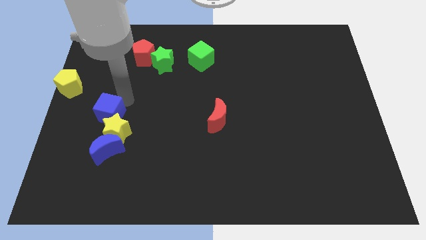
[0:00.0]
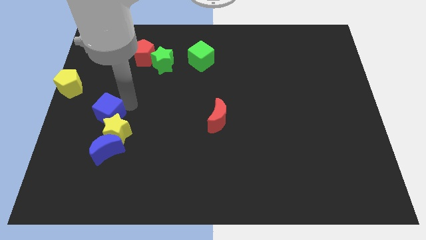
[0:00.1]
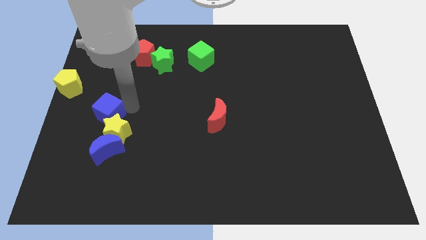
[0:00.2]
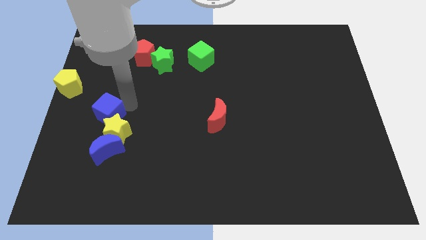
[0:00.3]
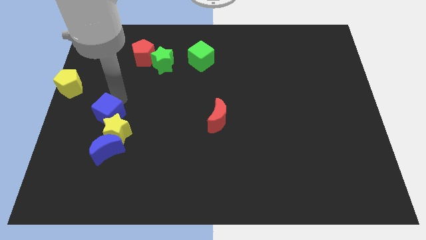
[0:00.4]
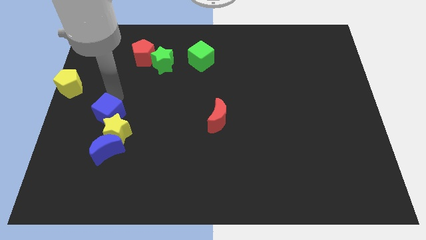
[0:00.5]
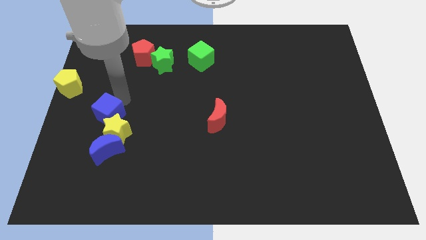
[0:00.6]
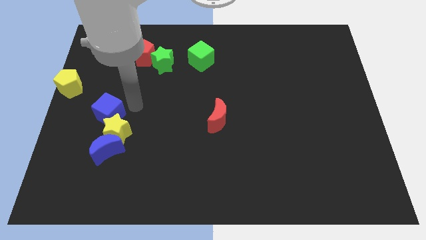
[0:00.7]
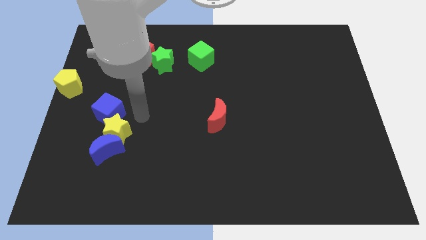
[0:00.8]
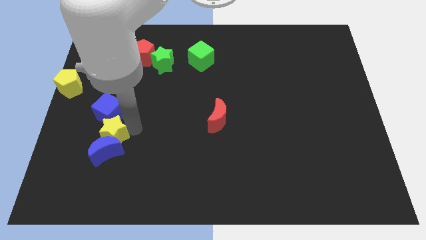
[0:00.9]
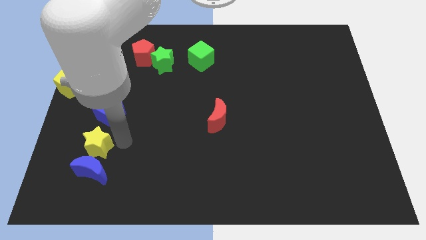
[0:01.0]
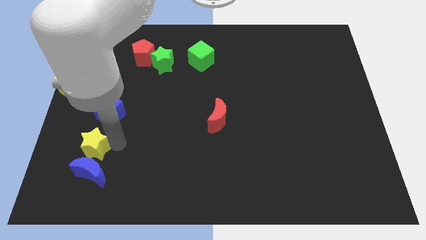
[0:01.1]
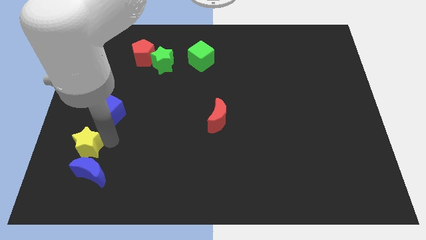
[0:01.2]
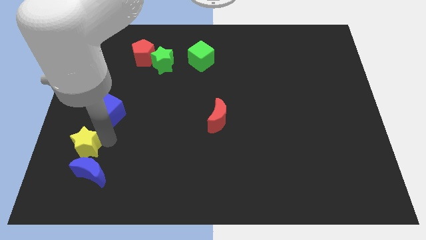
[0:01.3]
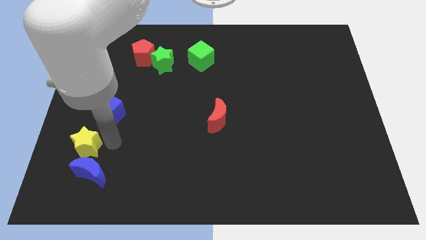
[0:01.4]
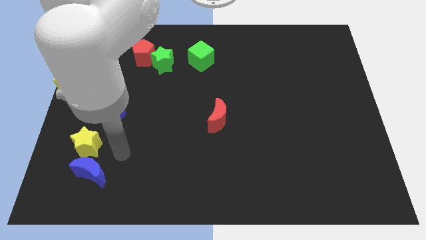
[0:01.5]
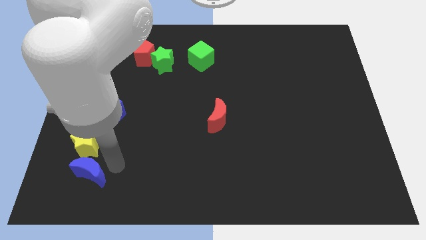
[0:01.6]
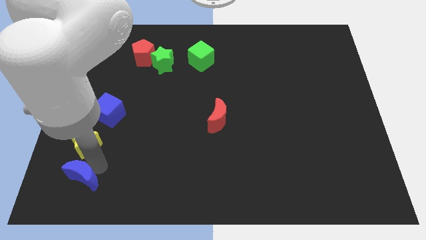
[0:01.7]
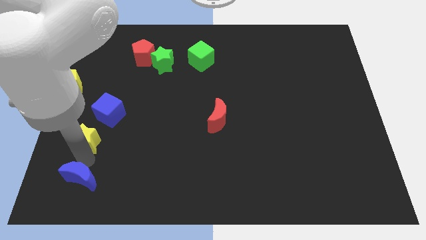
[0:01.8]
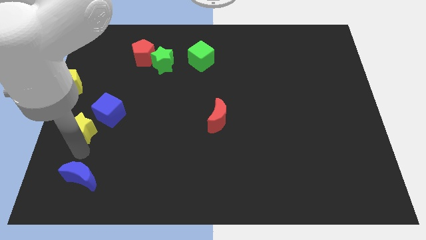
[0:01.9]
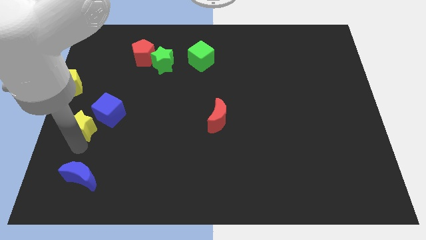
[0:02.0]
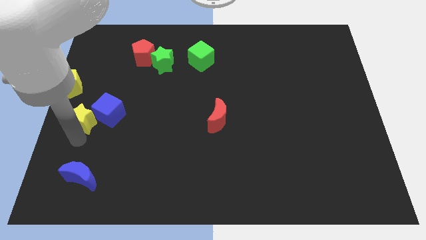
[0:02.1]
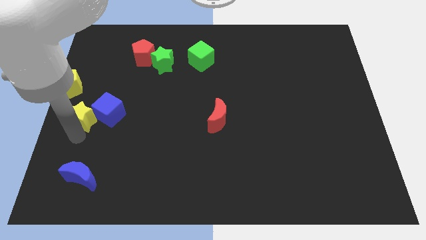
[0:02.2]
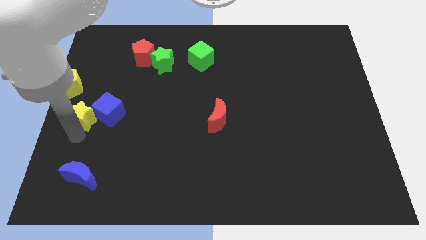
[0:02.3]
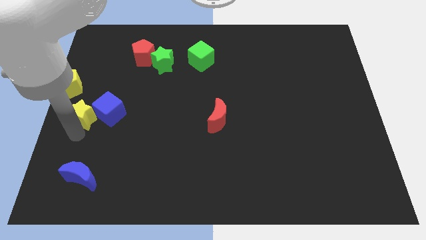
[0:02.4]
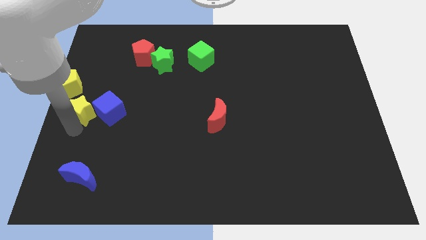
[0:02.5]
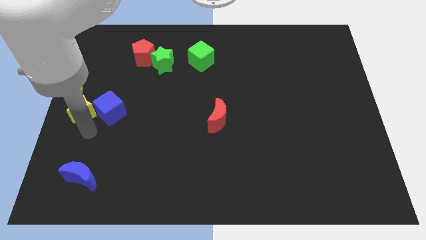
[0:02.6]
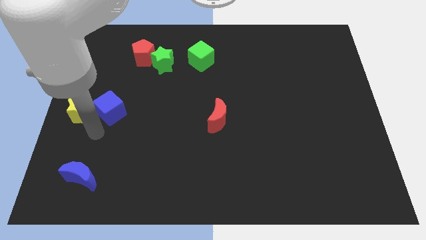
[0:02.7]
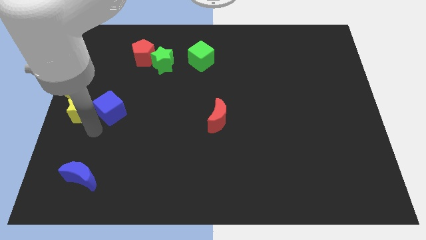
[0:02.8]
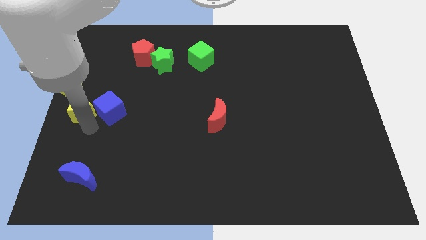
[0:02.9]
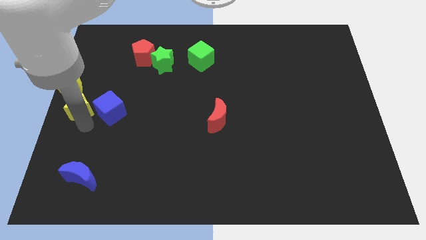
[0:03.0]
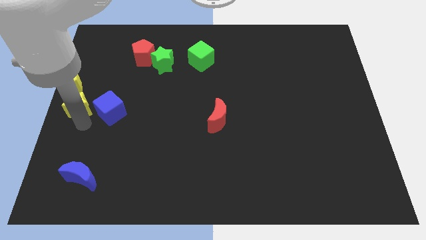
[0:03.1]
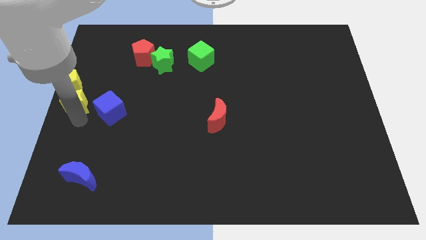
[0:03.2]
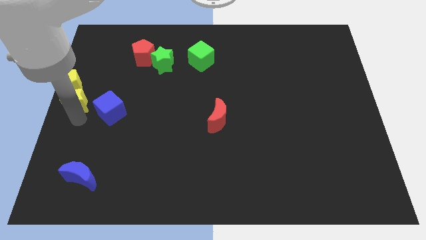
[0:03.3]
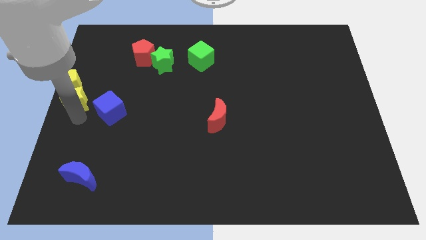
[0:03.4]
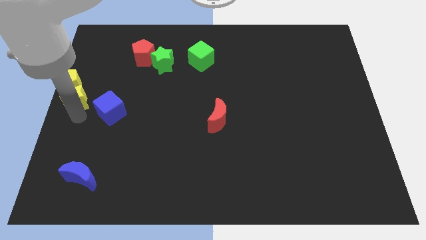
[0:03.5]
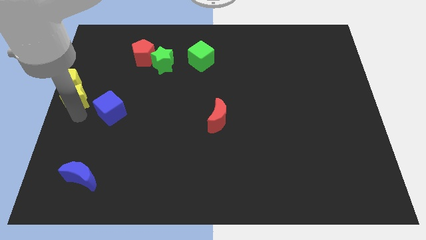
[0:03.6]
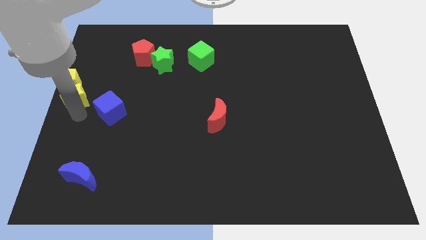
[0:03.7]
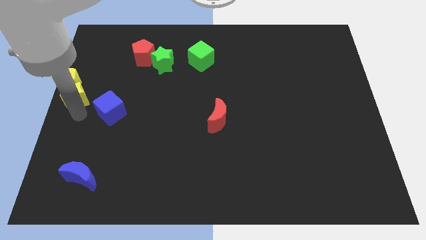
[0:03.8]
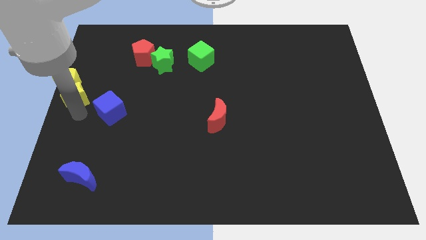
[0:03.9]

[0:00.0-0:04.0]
move the yellow star to the bottom side of the yellow pentagon

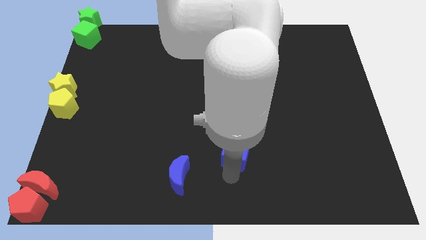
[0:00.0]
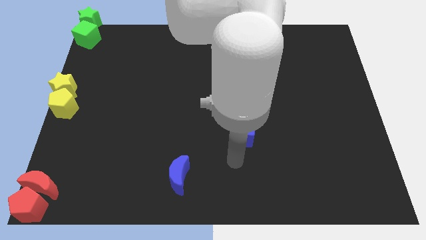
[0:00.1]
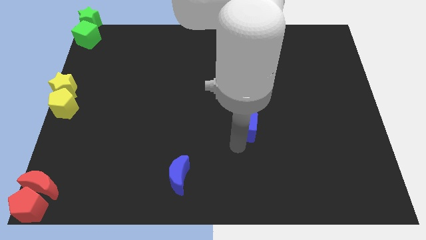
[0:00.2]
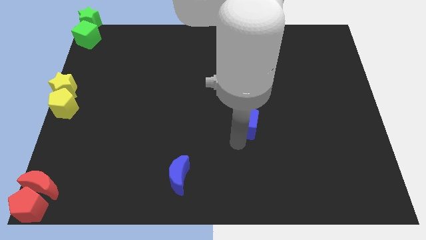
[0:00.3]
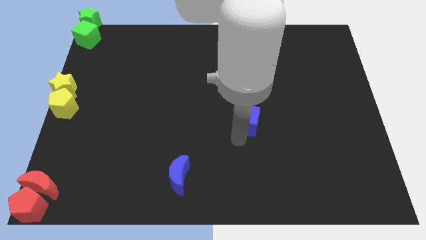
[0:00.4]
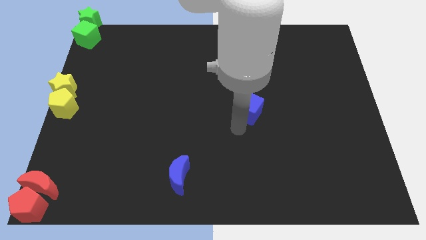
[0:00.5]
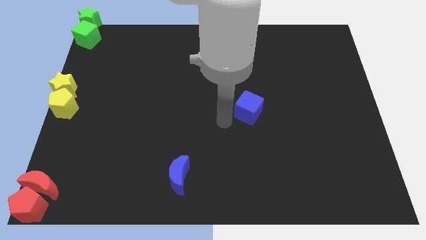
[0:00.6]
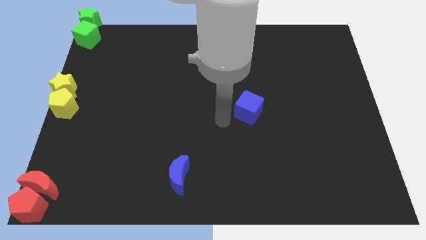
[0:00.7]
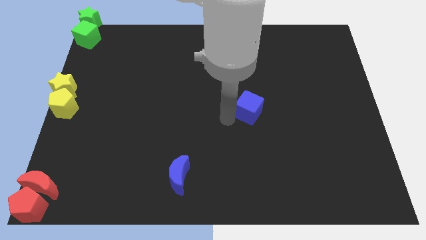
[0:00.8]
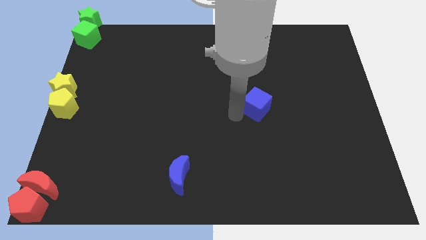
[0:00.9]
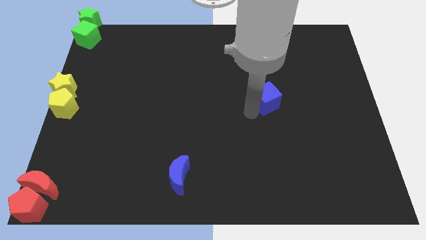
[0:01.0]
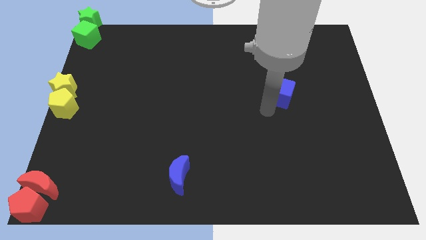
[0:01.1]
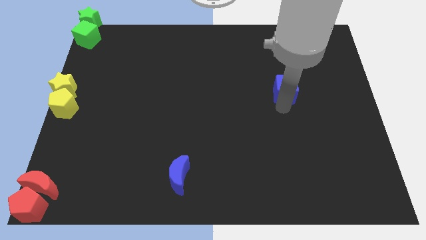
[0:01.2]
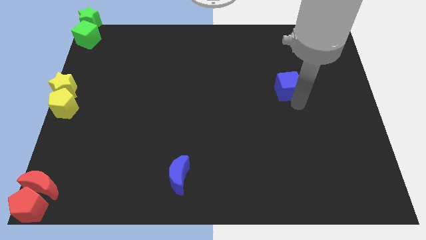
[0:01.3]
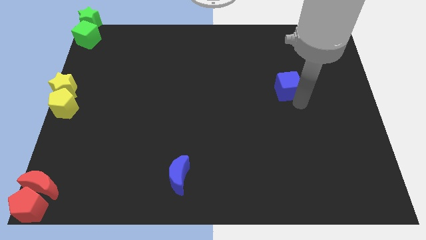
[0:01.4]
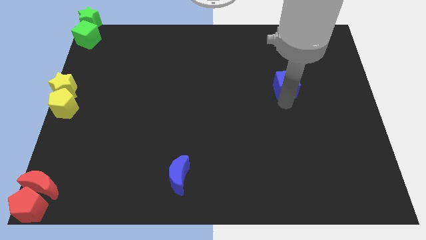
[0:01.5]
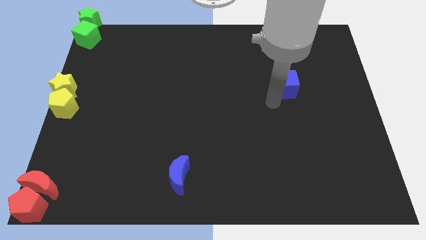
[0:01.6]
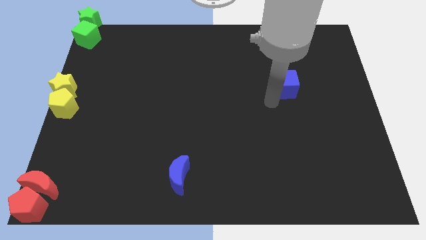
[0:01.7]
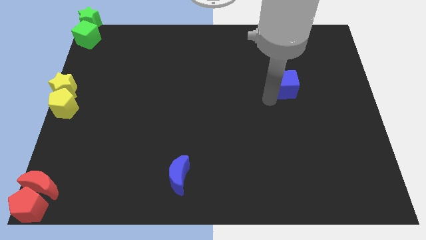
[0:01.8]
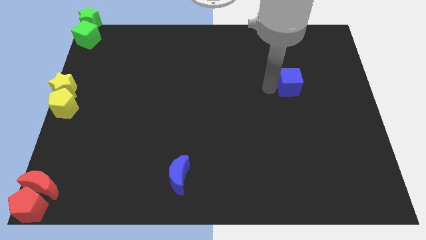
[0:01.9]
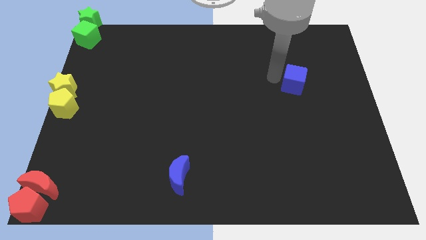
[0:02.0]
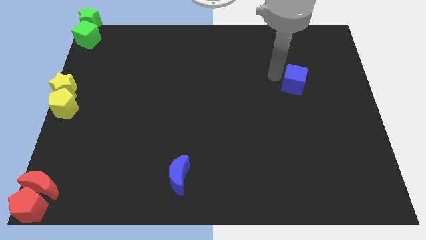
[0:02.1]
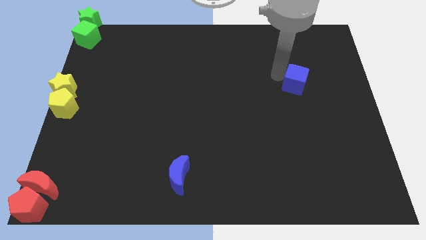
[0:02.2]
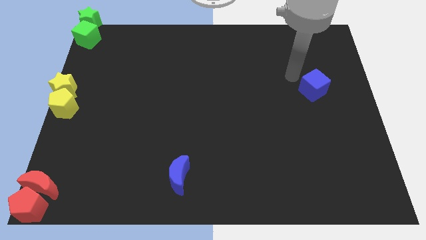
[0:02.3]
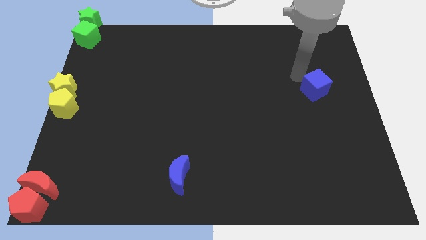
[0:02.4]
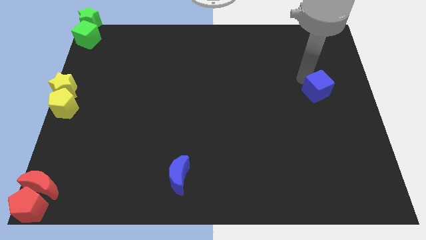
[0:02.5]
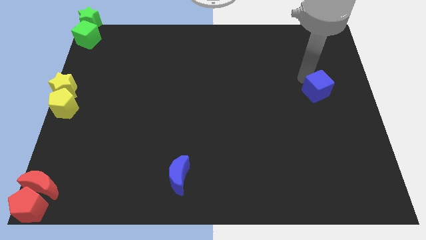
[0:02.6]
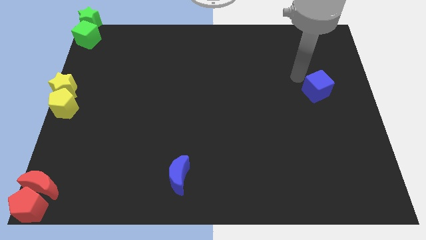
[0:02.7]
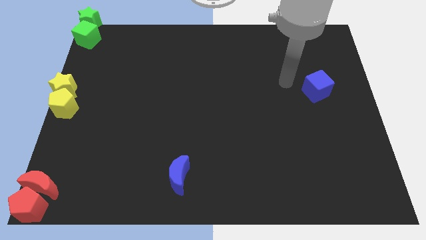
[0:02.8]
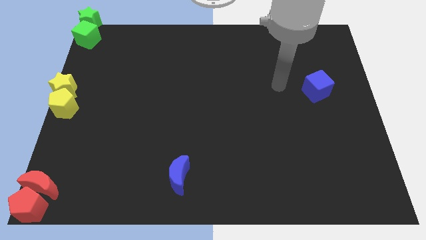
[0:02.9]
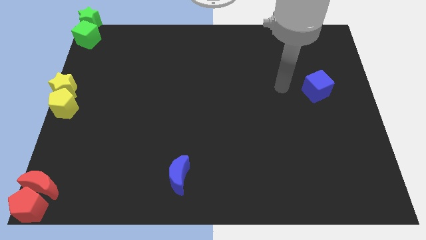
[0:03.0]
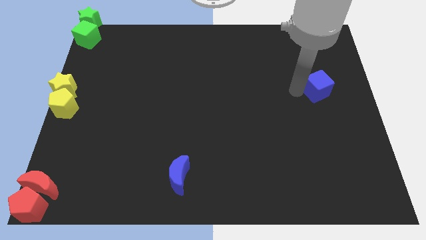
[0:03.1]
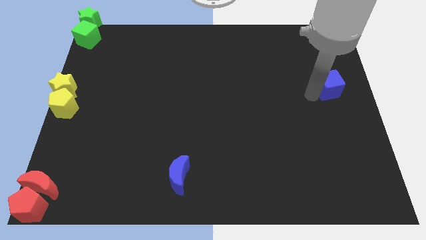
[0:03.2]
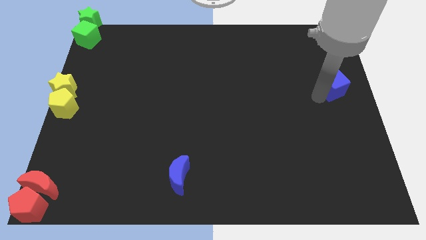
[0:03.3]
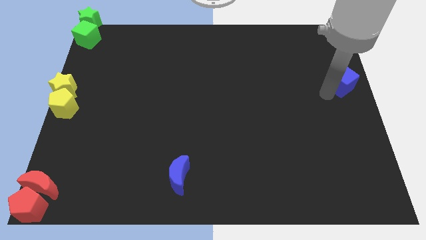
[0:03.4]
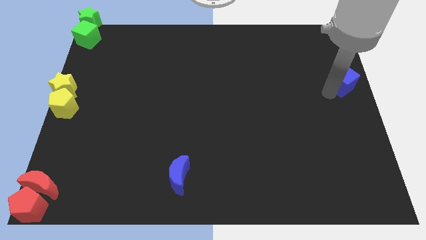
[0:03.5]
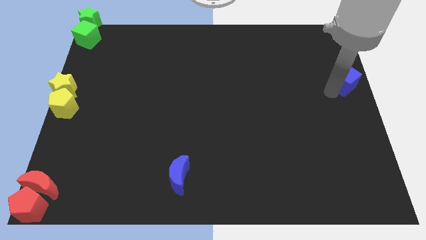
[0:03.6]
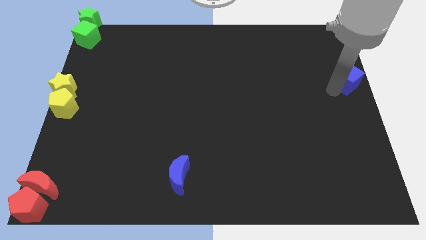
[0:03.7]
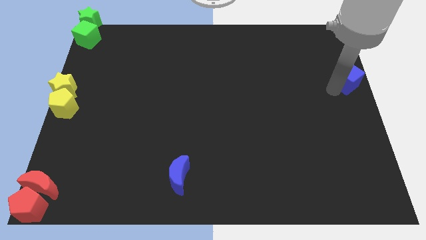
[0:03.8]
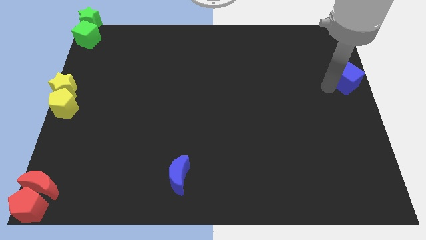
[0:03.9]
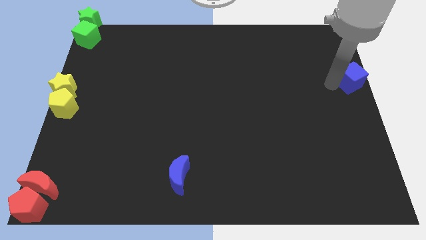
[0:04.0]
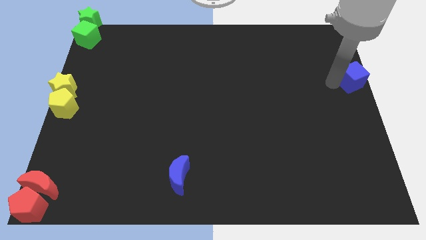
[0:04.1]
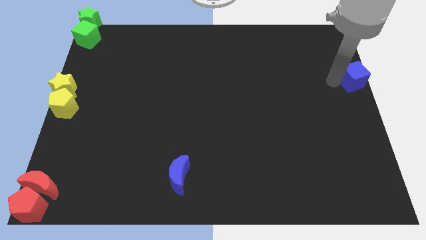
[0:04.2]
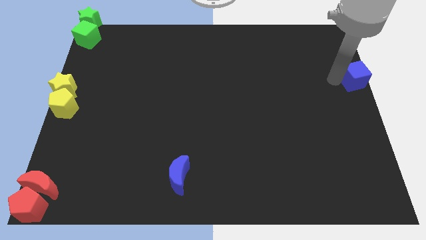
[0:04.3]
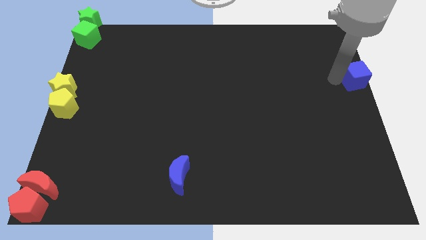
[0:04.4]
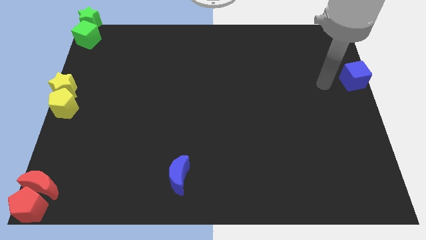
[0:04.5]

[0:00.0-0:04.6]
push the blue cube towards the right side of the board

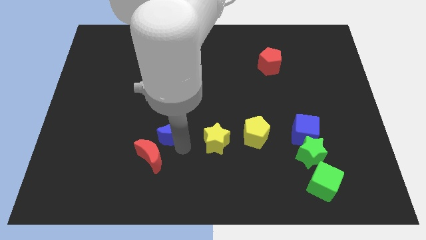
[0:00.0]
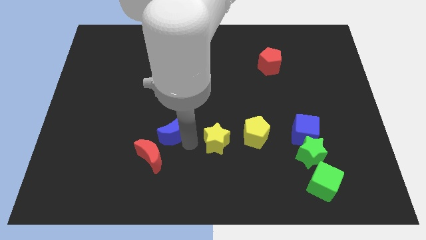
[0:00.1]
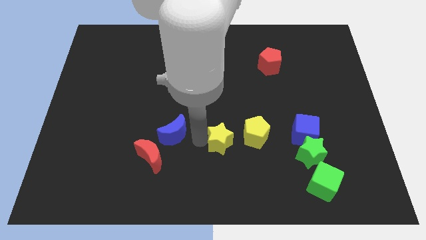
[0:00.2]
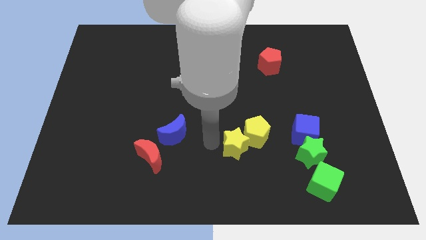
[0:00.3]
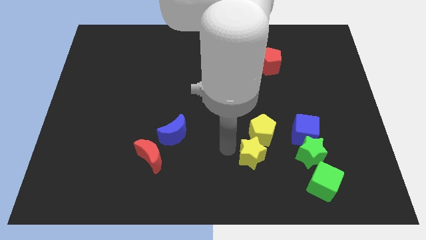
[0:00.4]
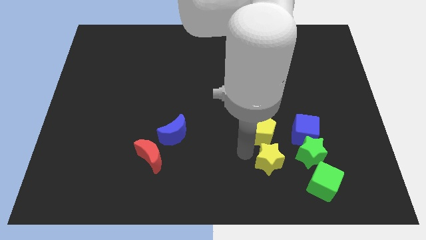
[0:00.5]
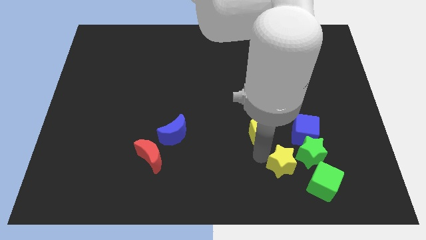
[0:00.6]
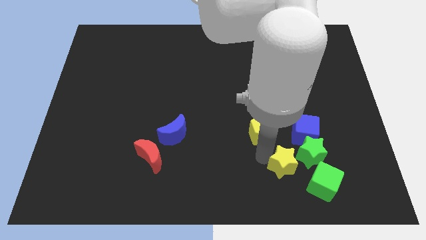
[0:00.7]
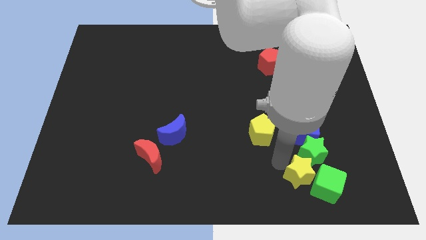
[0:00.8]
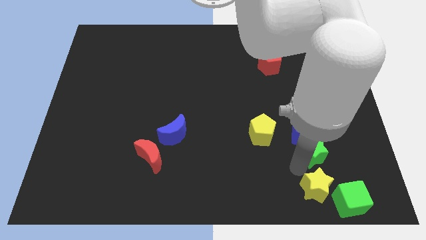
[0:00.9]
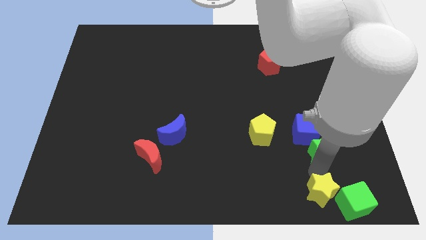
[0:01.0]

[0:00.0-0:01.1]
push the yellow star to the bottom of the green star
